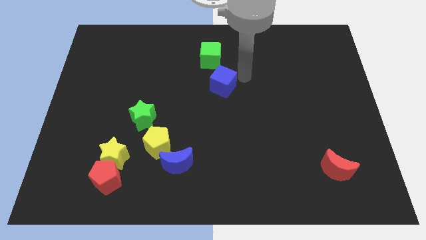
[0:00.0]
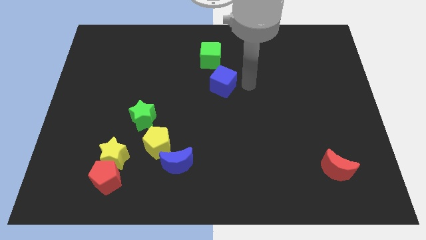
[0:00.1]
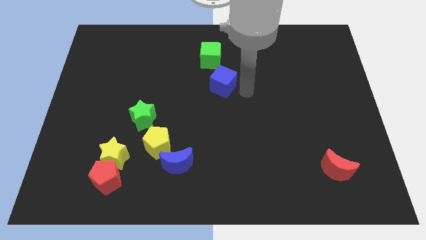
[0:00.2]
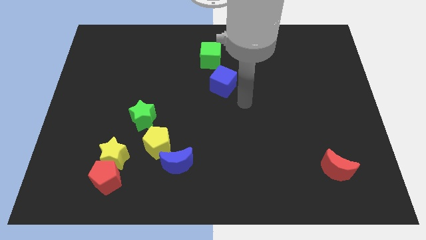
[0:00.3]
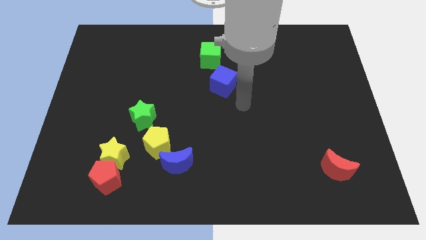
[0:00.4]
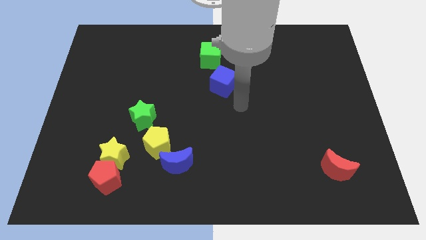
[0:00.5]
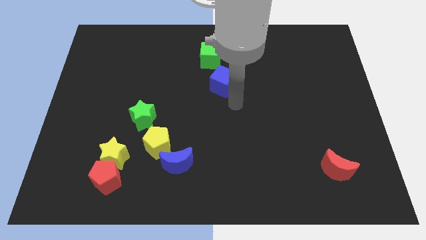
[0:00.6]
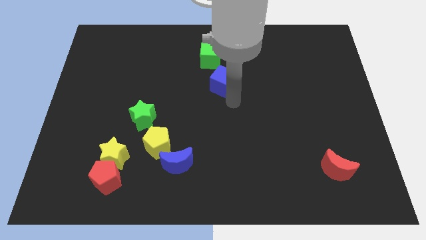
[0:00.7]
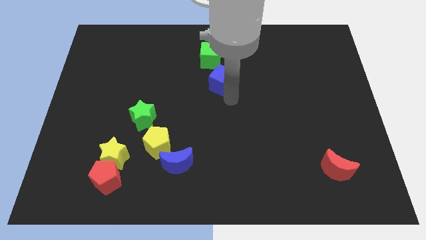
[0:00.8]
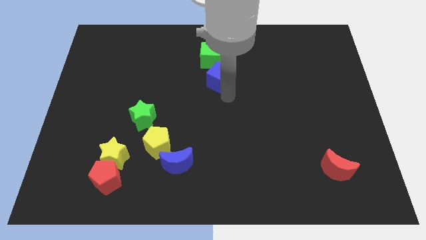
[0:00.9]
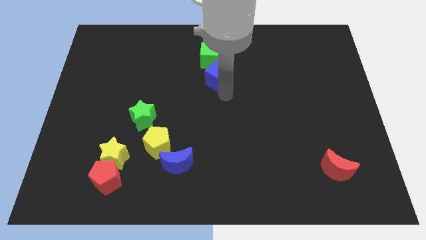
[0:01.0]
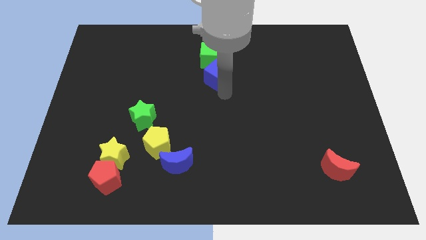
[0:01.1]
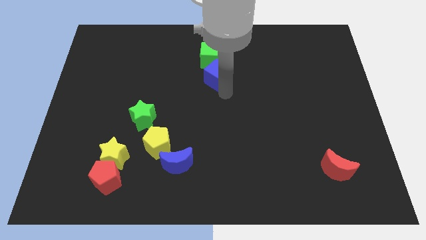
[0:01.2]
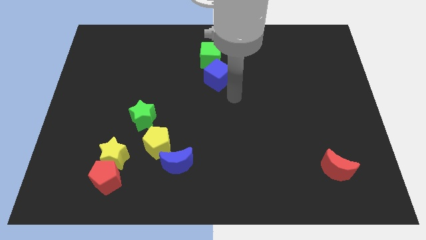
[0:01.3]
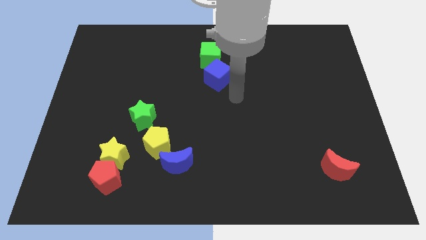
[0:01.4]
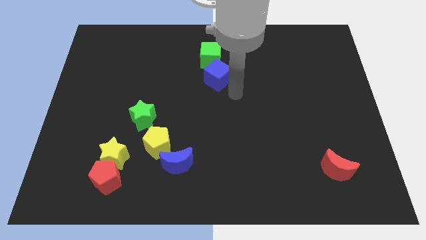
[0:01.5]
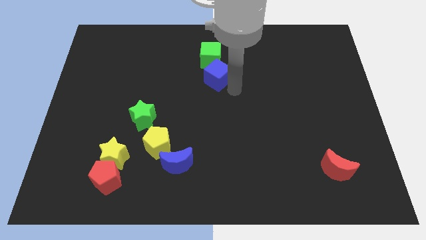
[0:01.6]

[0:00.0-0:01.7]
move blue cube into green cube

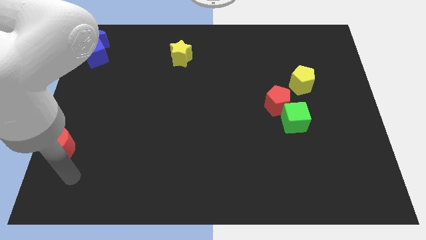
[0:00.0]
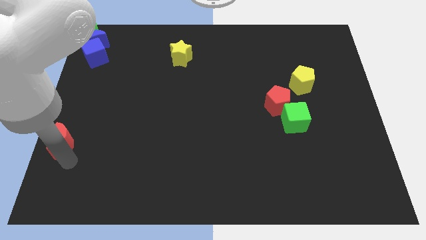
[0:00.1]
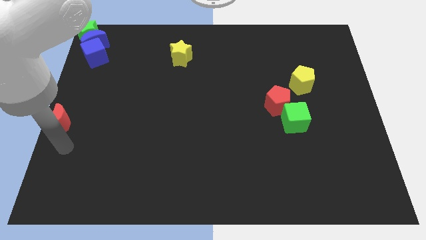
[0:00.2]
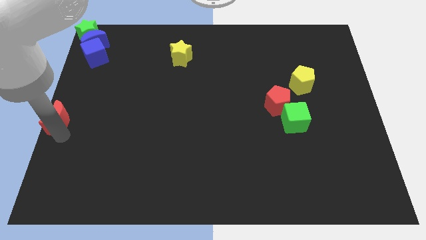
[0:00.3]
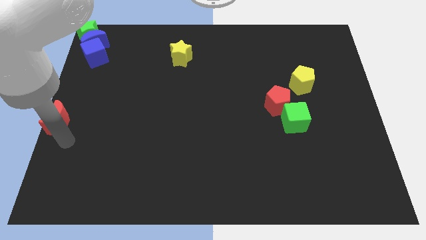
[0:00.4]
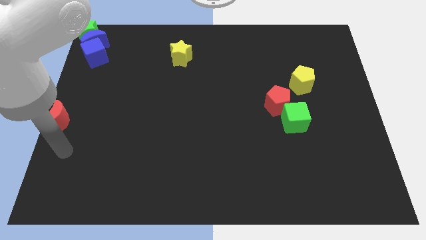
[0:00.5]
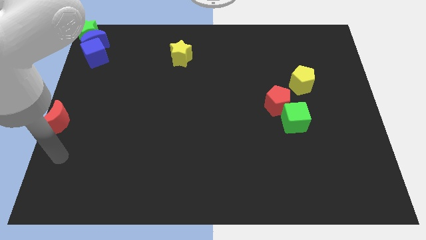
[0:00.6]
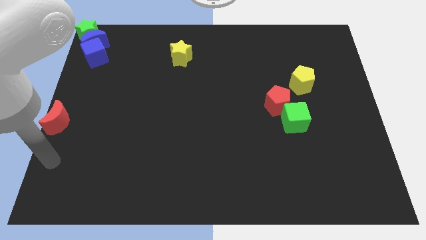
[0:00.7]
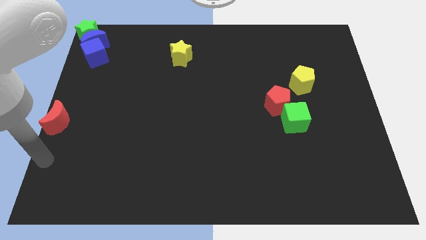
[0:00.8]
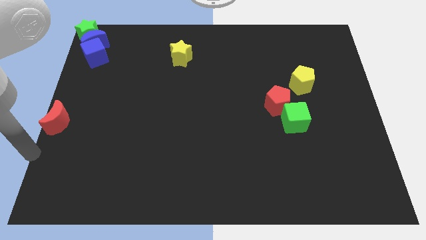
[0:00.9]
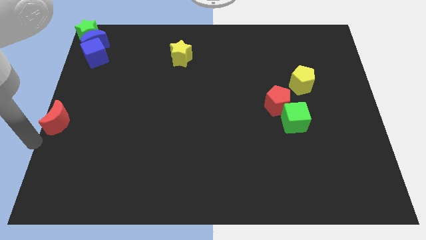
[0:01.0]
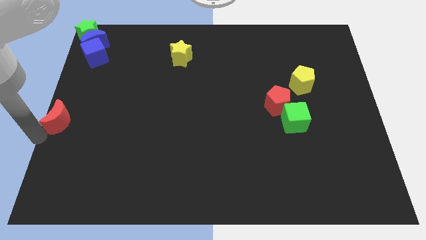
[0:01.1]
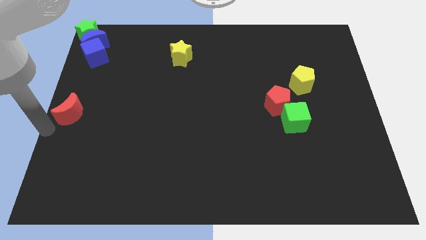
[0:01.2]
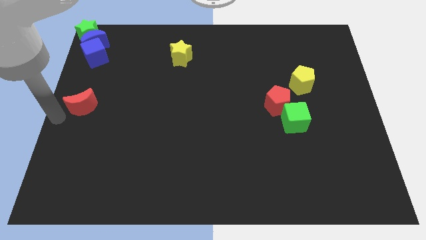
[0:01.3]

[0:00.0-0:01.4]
push the red moon upward

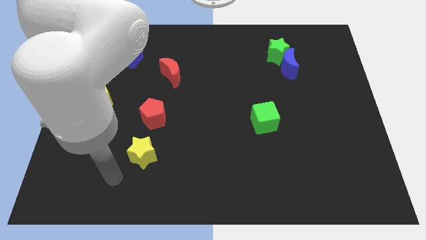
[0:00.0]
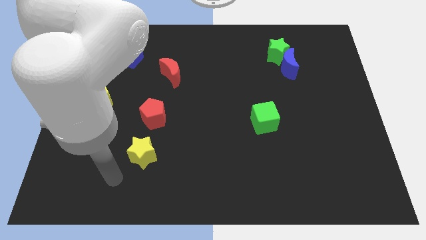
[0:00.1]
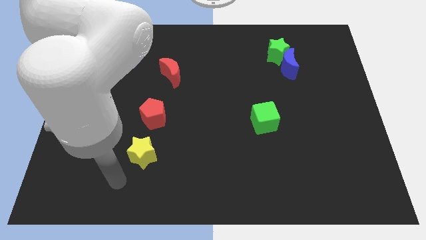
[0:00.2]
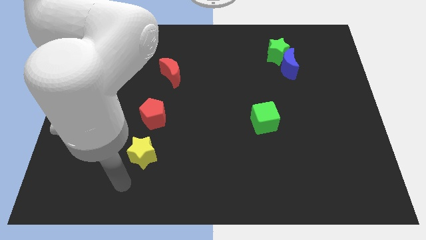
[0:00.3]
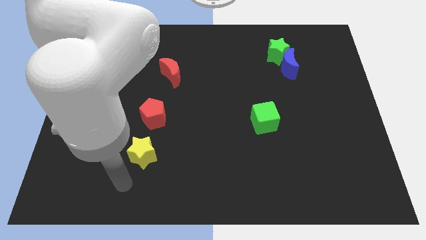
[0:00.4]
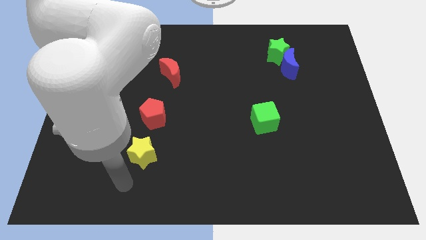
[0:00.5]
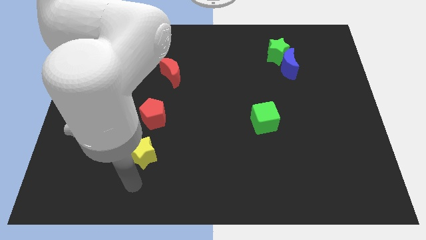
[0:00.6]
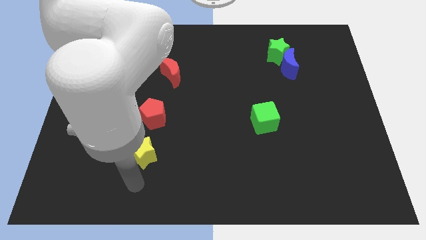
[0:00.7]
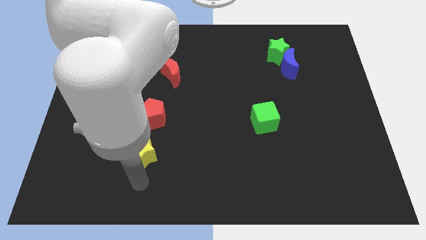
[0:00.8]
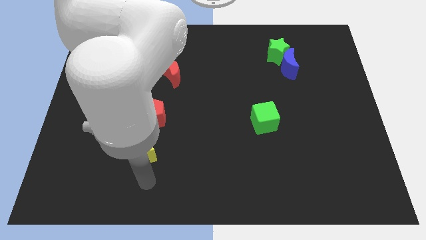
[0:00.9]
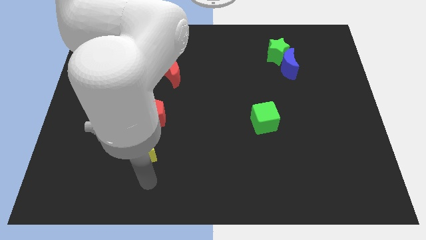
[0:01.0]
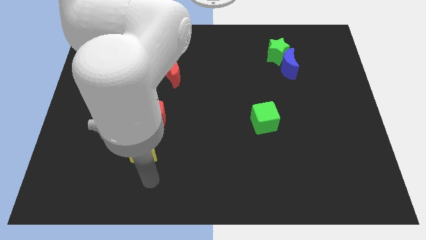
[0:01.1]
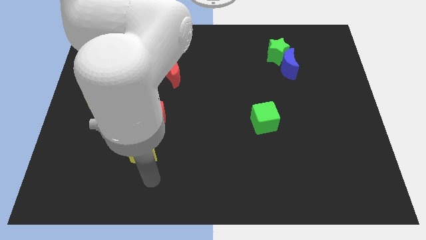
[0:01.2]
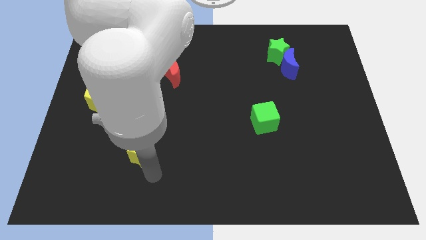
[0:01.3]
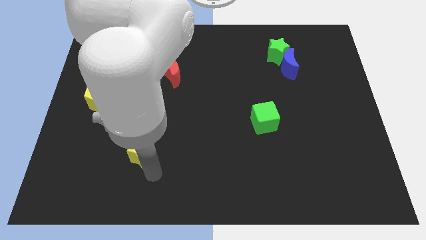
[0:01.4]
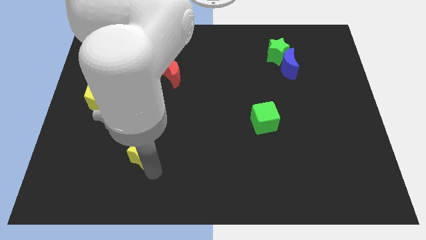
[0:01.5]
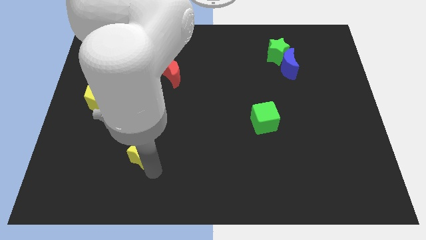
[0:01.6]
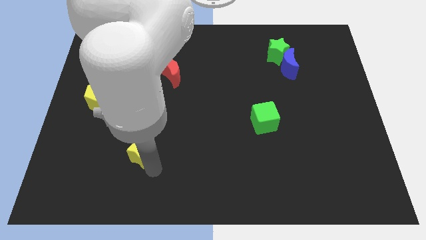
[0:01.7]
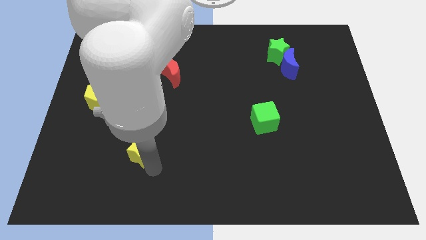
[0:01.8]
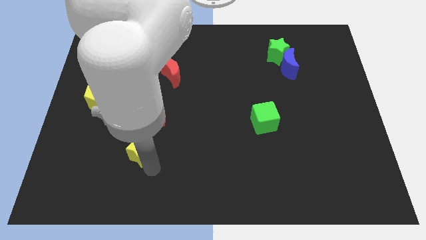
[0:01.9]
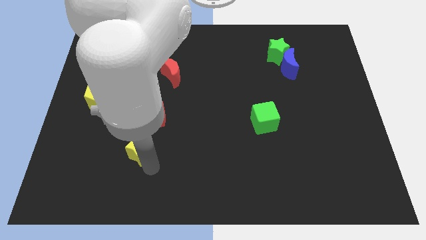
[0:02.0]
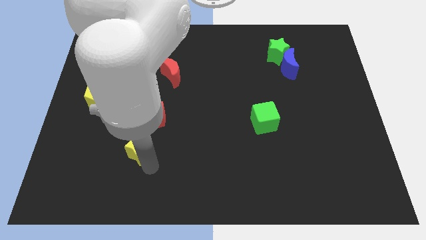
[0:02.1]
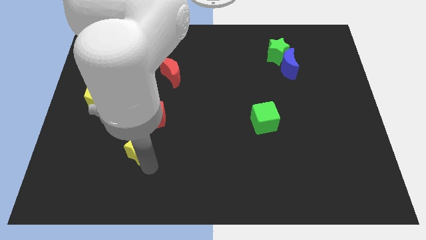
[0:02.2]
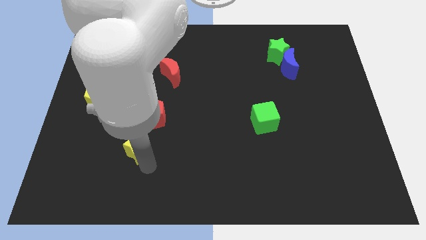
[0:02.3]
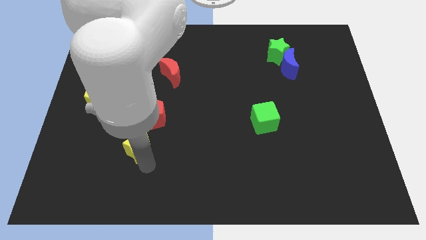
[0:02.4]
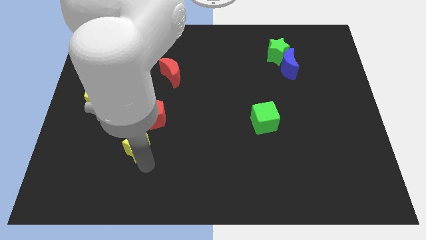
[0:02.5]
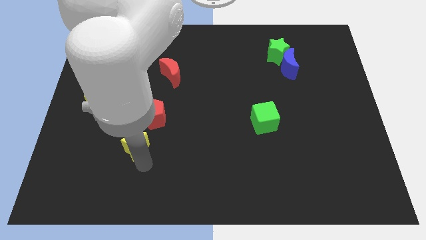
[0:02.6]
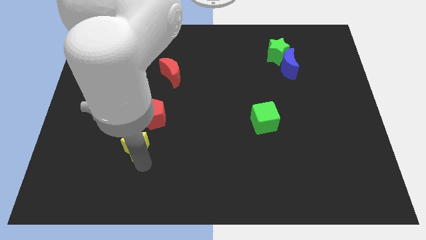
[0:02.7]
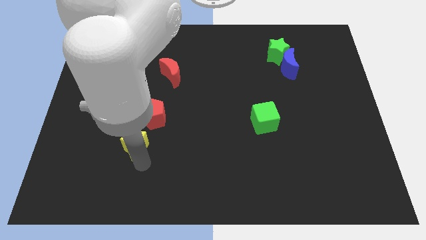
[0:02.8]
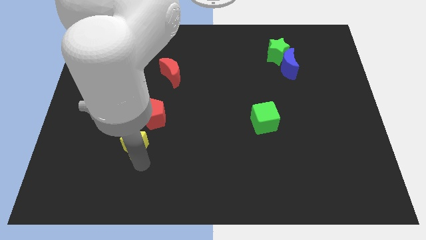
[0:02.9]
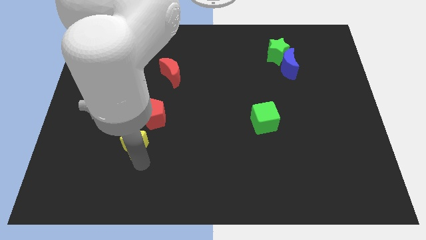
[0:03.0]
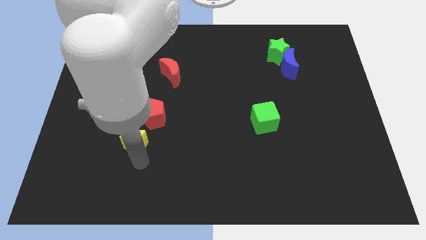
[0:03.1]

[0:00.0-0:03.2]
move the yellow star towards the bottom side of the red pentagon

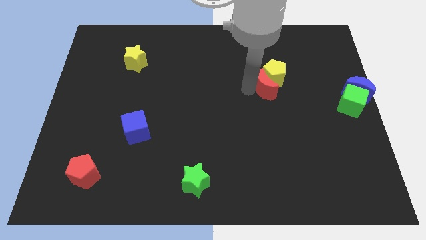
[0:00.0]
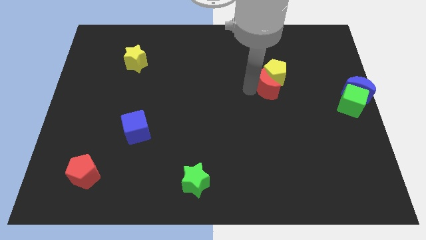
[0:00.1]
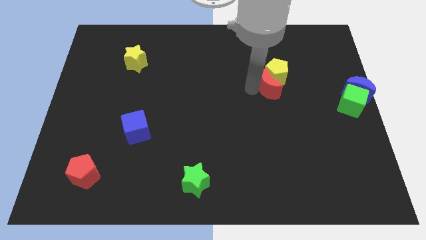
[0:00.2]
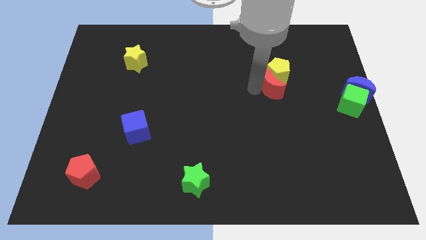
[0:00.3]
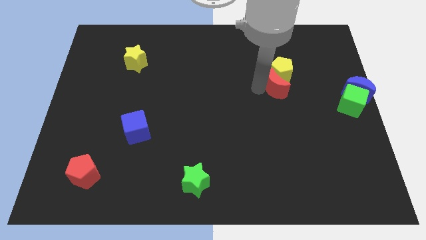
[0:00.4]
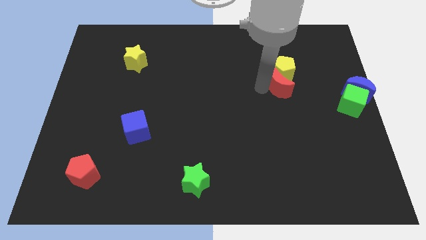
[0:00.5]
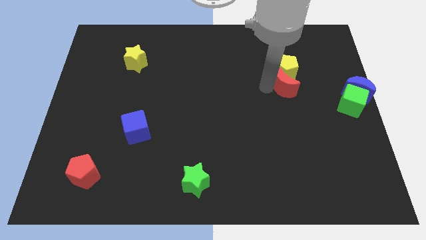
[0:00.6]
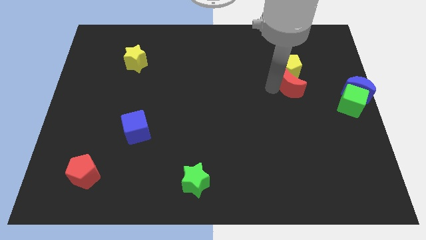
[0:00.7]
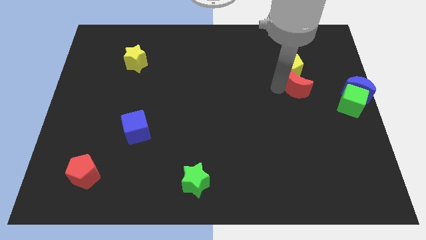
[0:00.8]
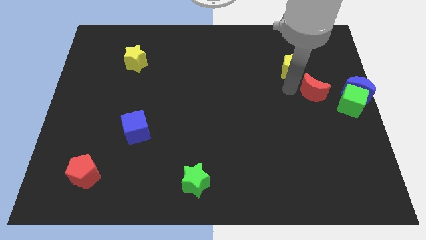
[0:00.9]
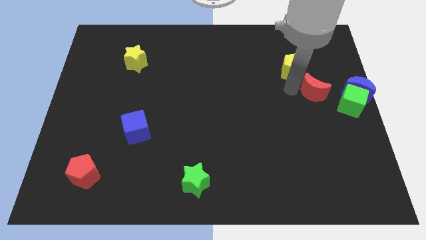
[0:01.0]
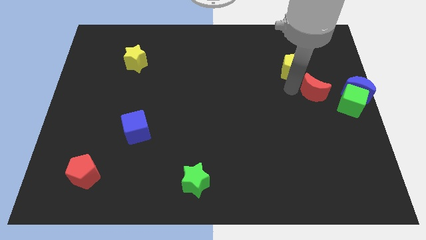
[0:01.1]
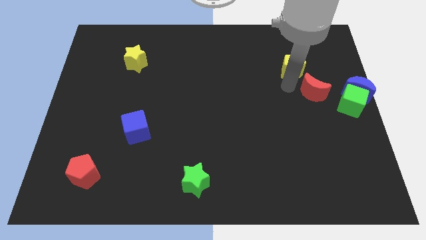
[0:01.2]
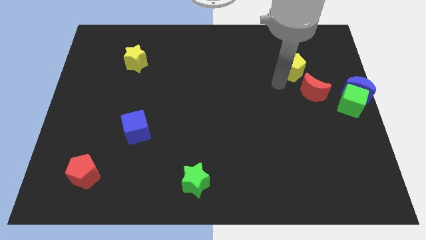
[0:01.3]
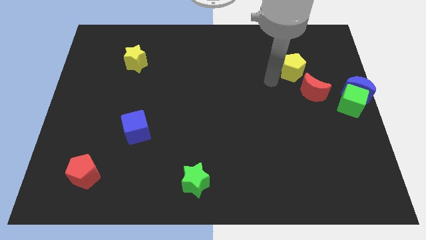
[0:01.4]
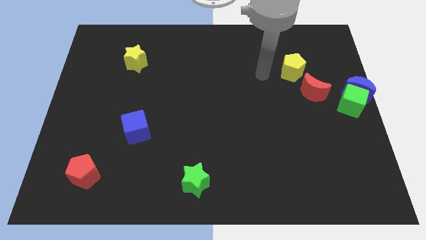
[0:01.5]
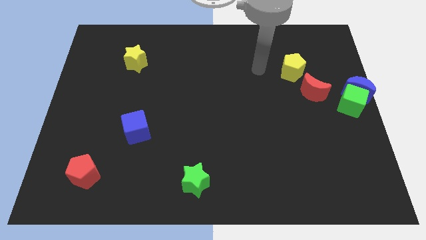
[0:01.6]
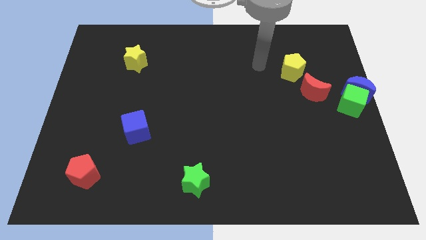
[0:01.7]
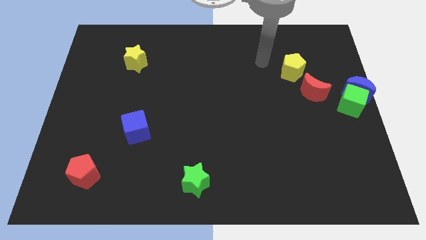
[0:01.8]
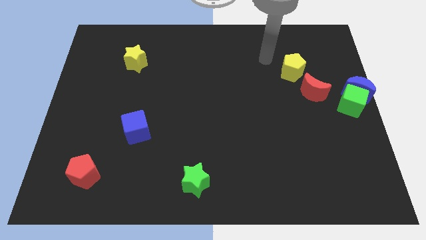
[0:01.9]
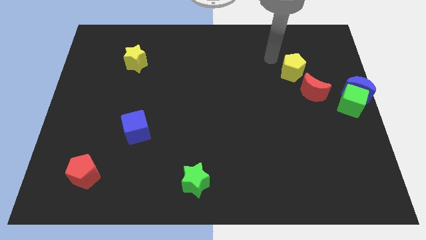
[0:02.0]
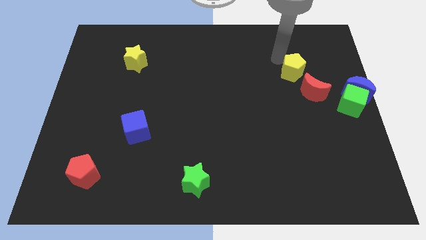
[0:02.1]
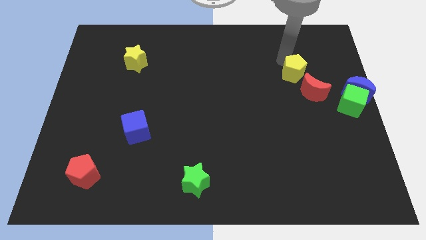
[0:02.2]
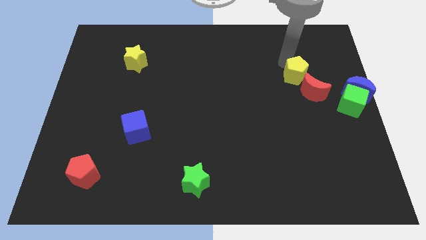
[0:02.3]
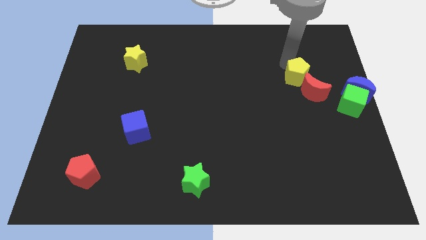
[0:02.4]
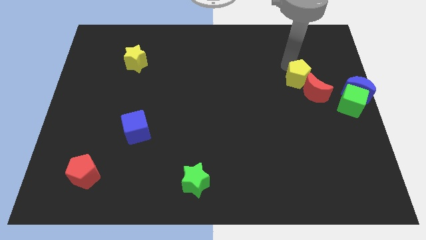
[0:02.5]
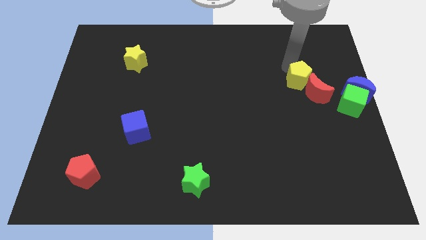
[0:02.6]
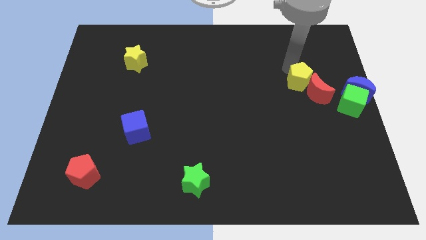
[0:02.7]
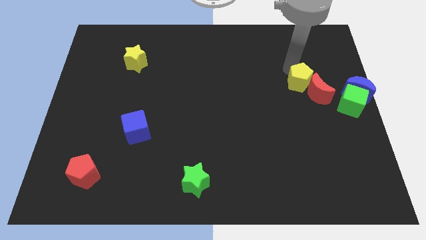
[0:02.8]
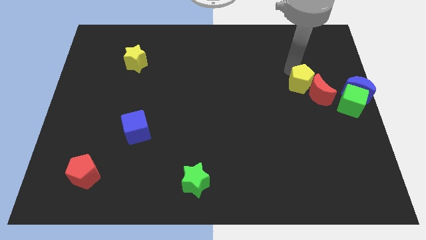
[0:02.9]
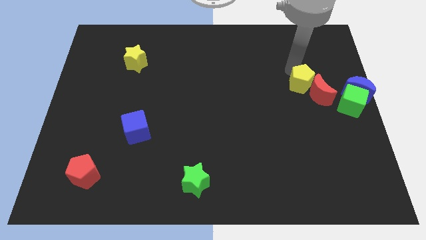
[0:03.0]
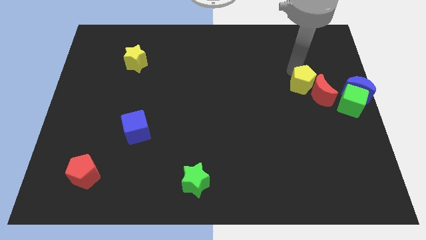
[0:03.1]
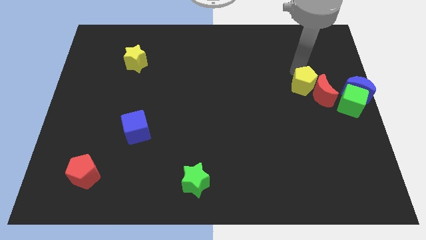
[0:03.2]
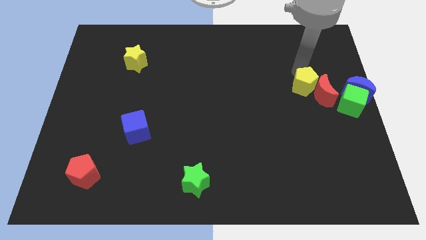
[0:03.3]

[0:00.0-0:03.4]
push the yellow pentagon to the left of the green cube along with the yellow pentagon
